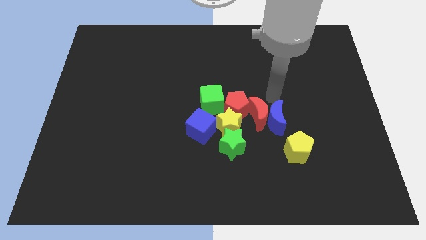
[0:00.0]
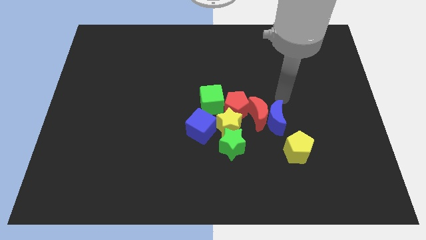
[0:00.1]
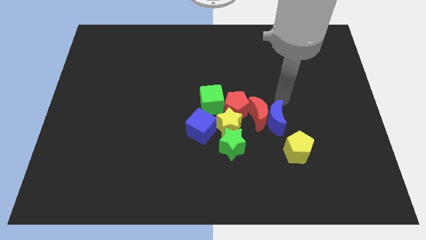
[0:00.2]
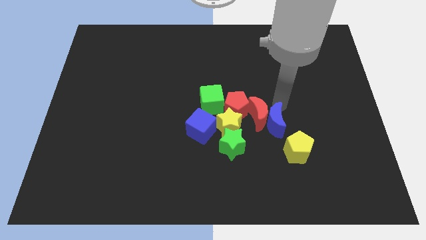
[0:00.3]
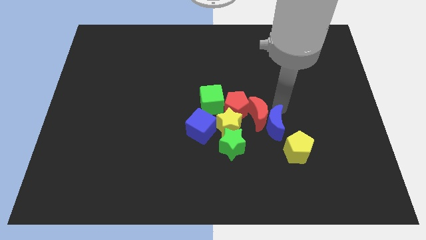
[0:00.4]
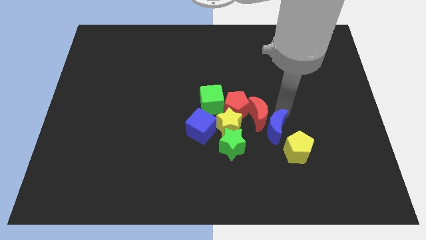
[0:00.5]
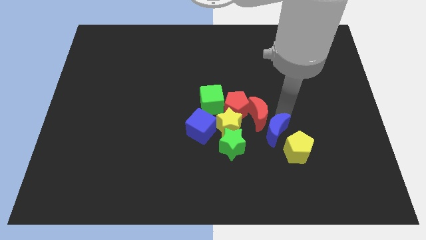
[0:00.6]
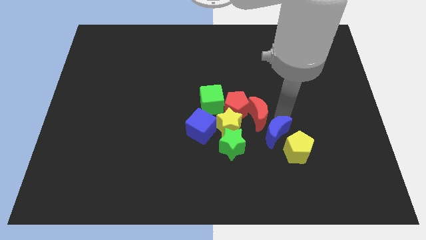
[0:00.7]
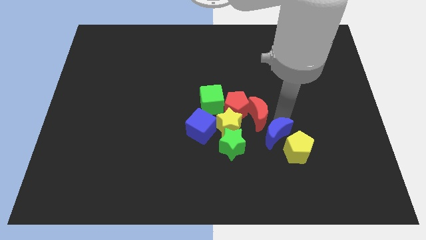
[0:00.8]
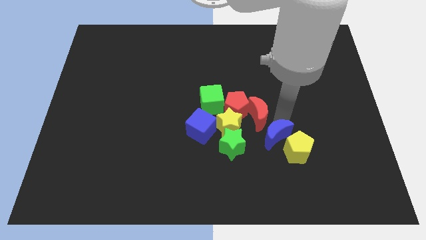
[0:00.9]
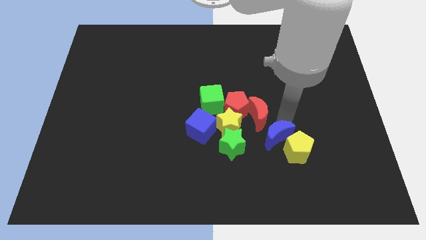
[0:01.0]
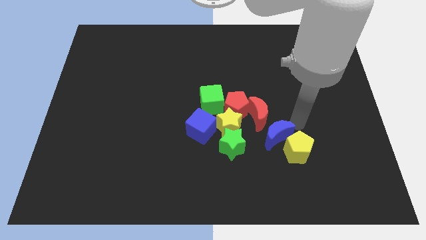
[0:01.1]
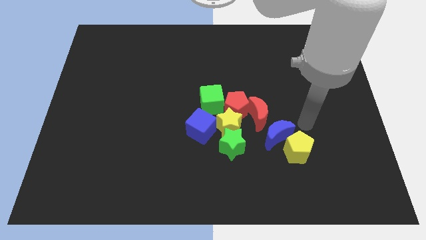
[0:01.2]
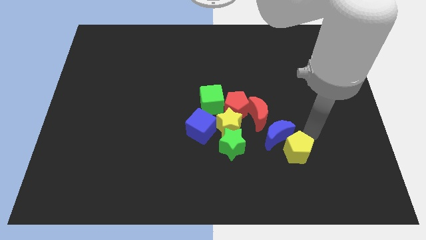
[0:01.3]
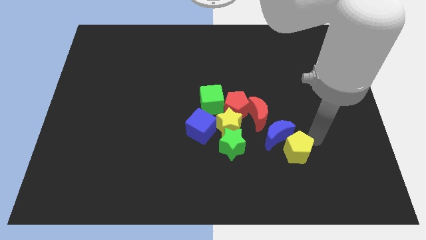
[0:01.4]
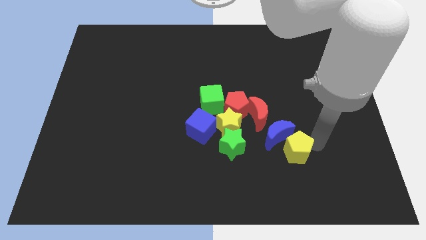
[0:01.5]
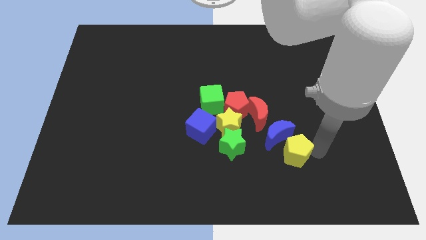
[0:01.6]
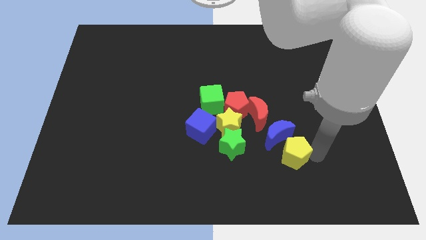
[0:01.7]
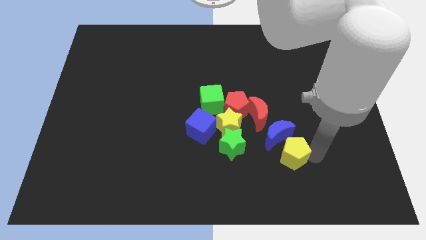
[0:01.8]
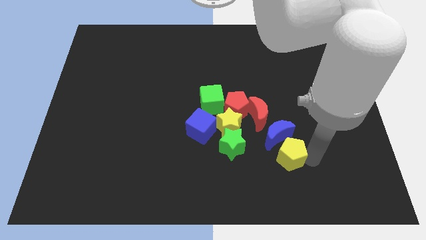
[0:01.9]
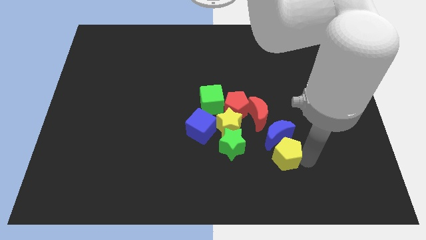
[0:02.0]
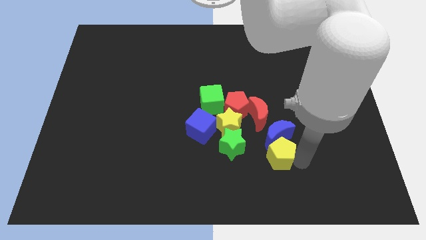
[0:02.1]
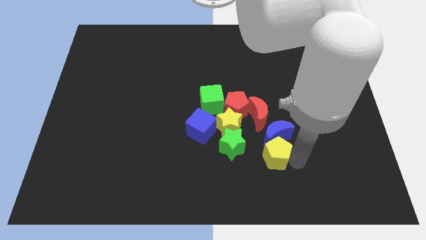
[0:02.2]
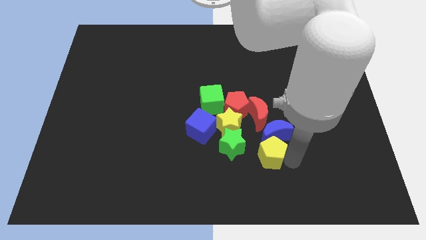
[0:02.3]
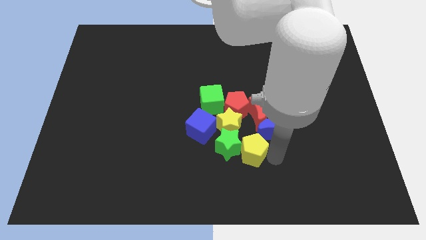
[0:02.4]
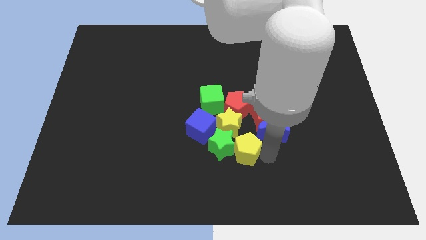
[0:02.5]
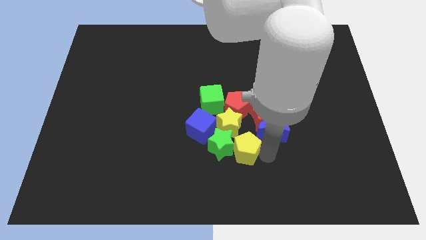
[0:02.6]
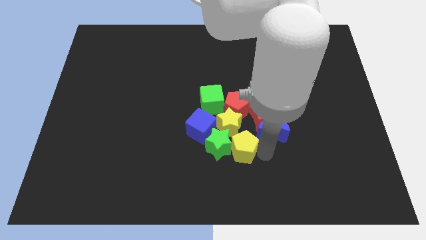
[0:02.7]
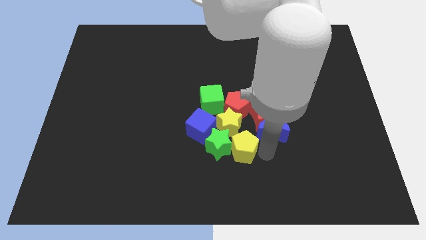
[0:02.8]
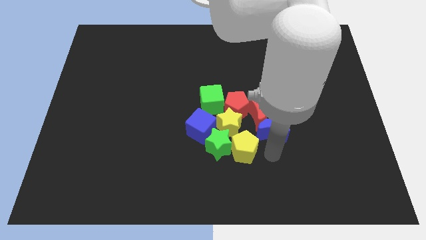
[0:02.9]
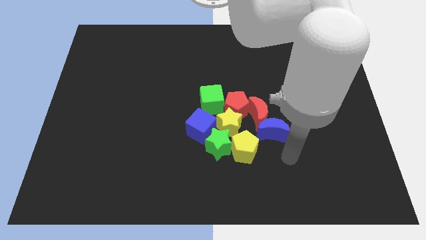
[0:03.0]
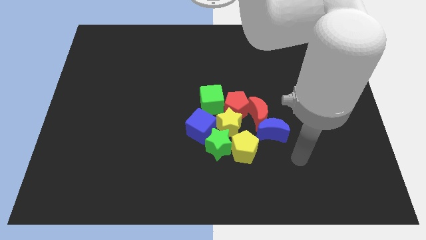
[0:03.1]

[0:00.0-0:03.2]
move blue moon diagonally top right to the yellow pentagon

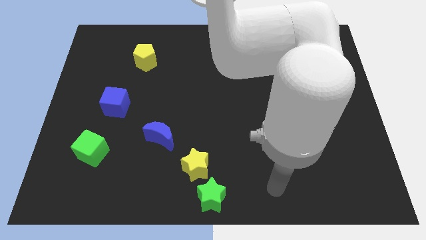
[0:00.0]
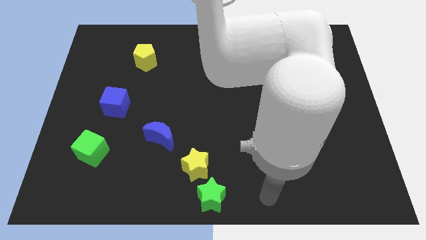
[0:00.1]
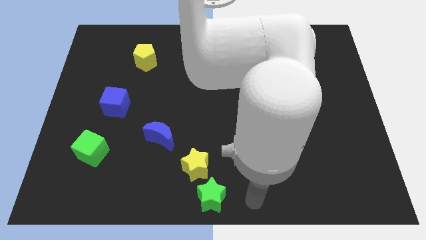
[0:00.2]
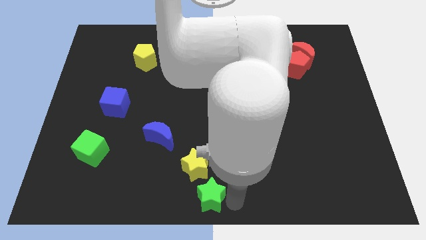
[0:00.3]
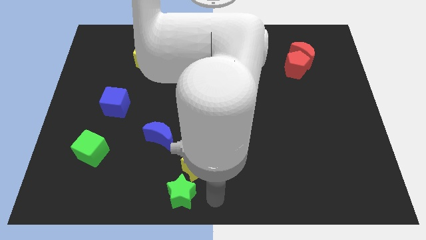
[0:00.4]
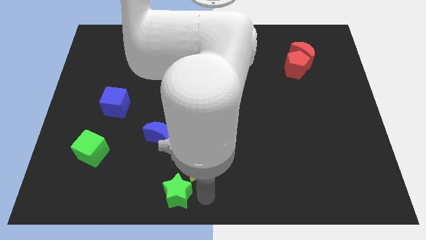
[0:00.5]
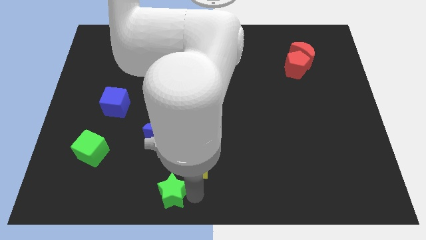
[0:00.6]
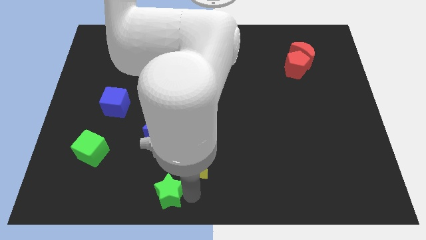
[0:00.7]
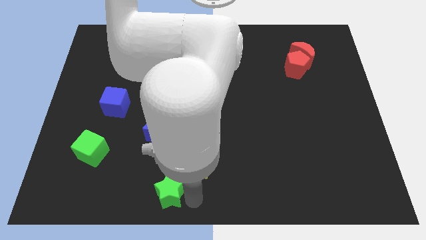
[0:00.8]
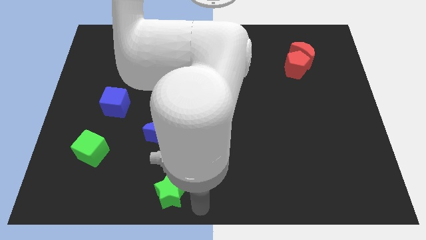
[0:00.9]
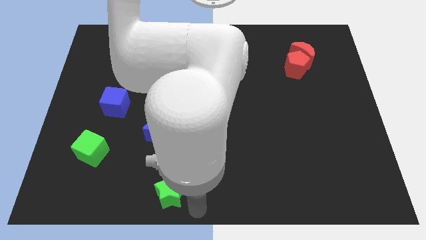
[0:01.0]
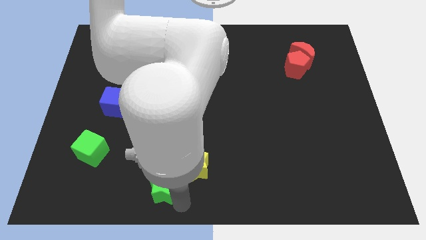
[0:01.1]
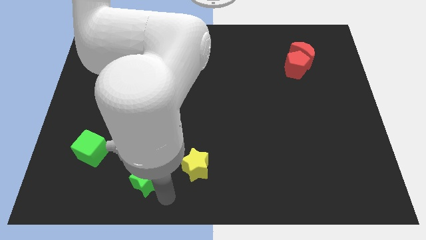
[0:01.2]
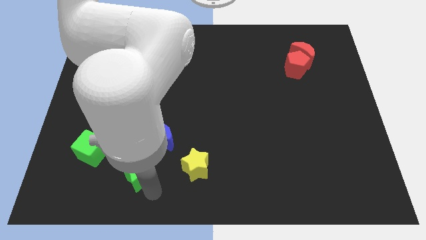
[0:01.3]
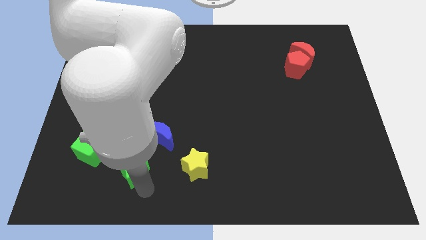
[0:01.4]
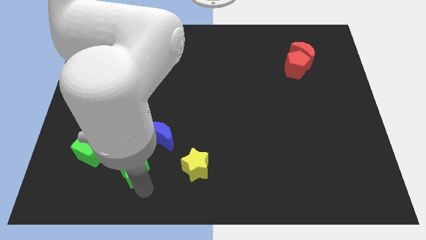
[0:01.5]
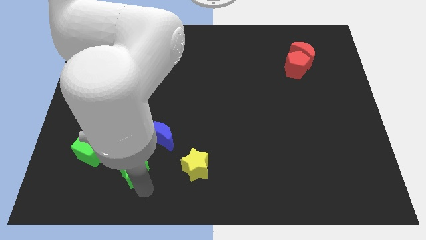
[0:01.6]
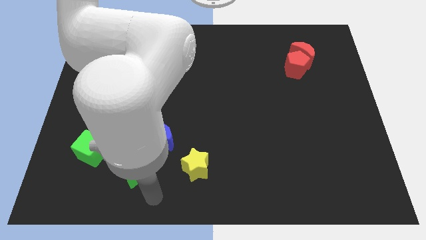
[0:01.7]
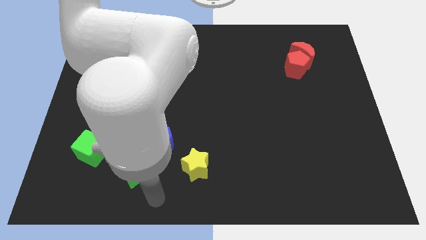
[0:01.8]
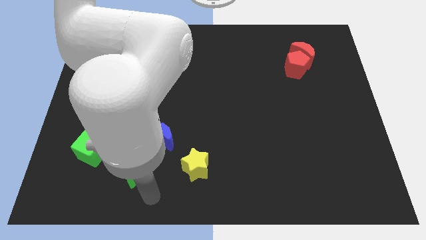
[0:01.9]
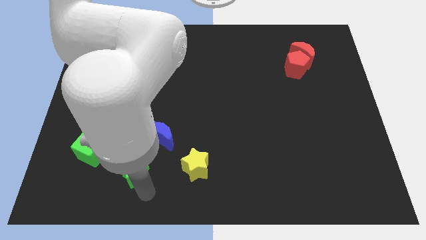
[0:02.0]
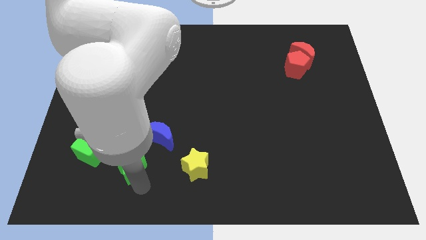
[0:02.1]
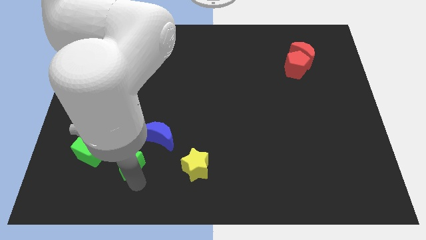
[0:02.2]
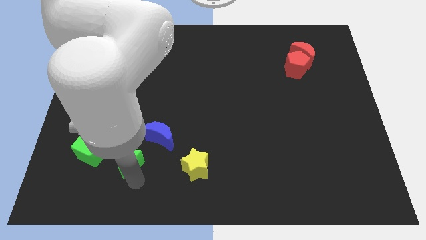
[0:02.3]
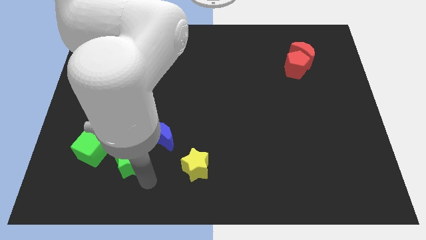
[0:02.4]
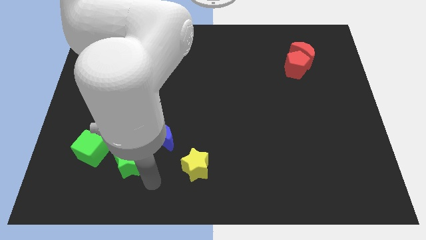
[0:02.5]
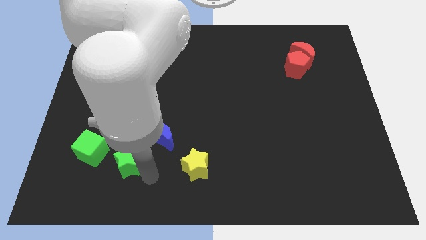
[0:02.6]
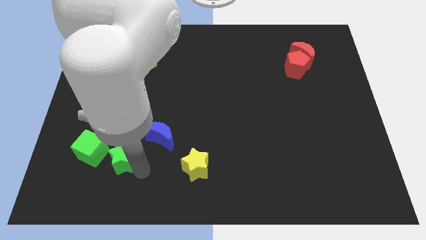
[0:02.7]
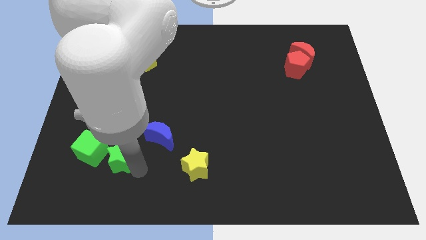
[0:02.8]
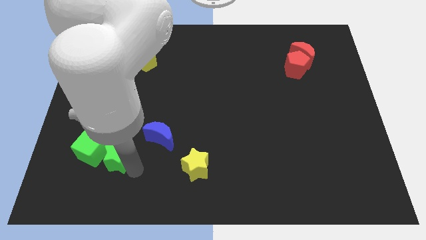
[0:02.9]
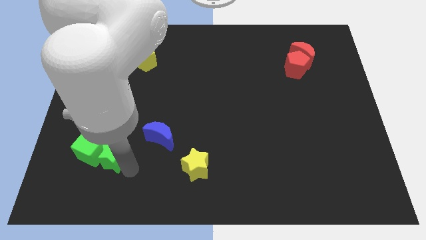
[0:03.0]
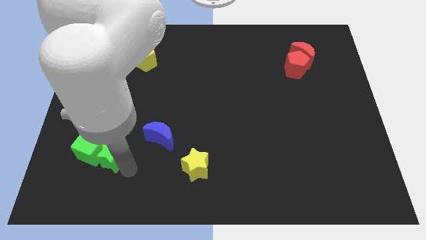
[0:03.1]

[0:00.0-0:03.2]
place green star into green cube

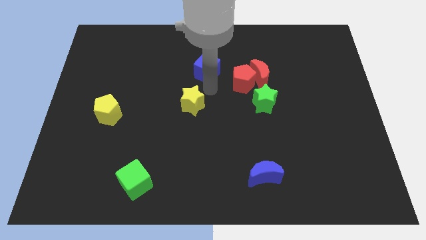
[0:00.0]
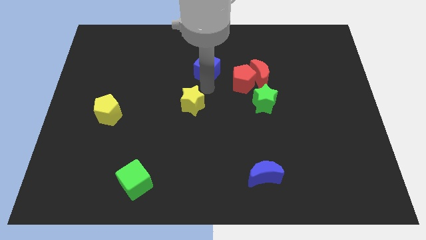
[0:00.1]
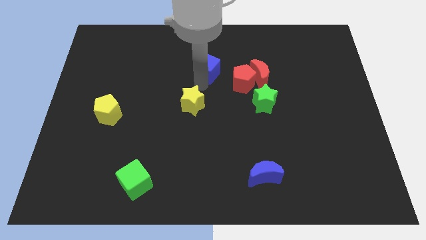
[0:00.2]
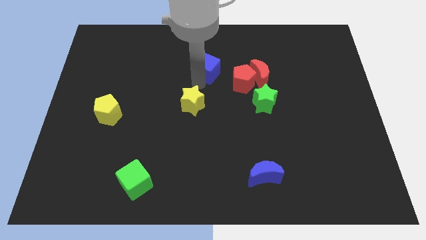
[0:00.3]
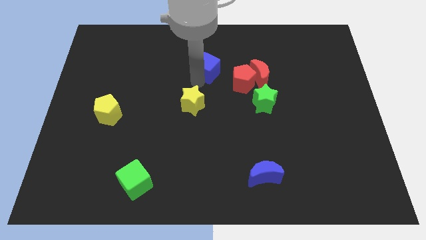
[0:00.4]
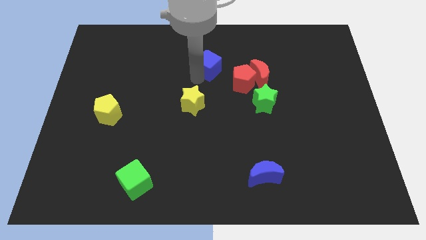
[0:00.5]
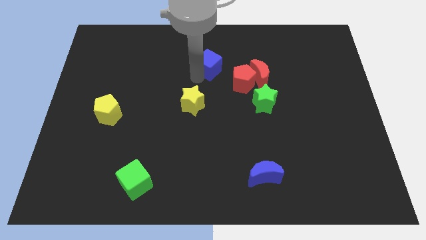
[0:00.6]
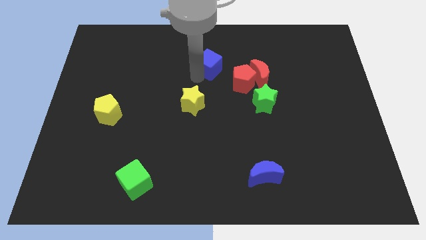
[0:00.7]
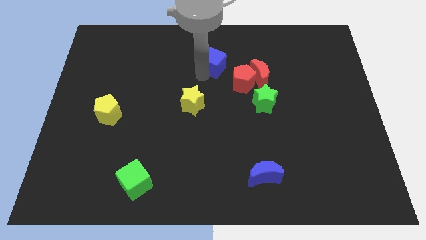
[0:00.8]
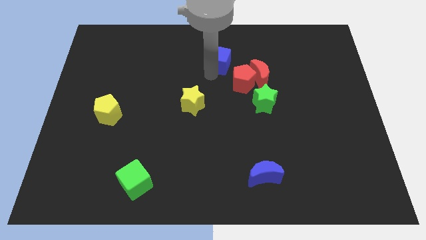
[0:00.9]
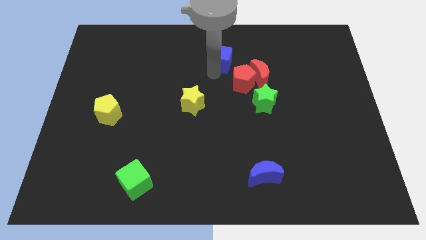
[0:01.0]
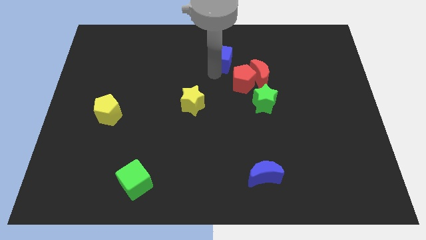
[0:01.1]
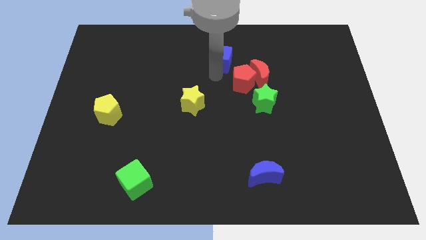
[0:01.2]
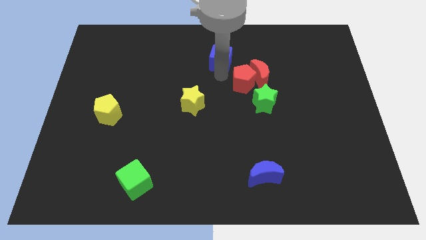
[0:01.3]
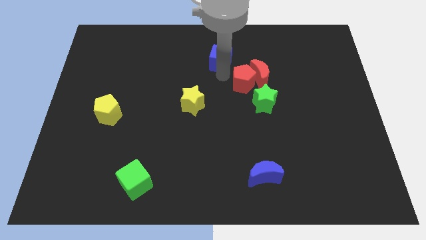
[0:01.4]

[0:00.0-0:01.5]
move the blue cube slightly towards the top center of the board

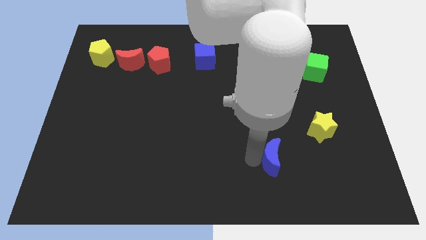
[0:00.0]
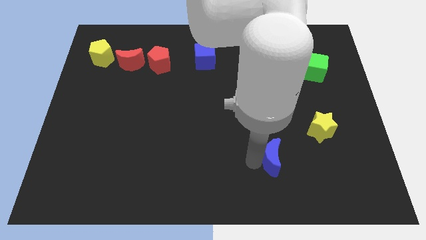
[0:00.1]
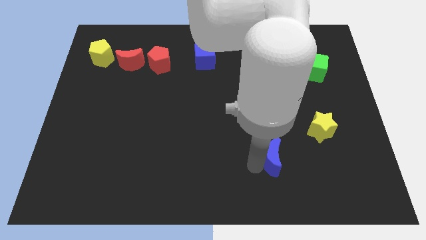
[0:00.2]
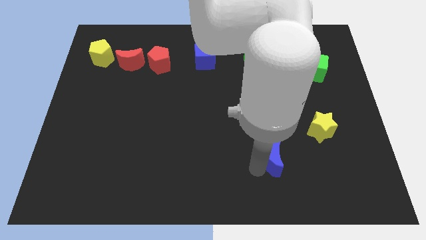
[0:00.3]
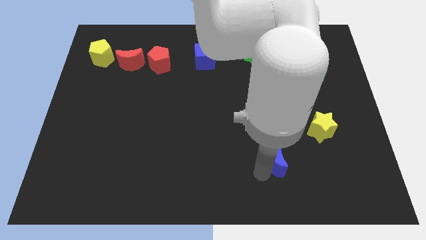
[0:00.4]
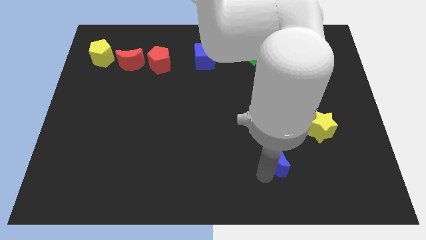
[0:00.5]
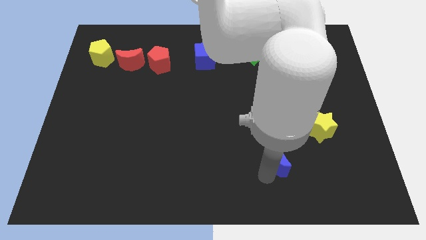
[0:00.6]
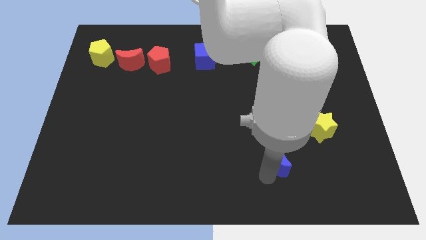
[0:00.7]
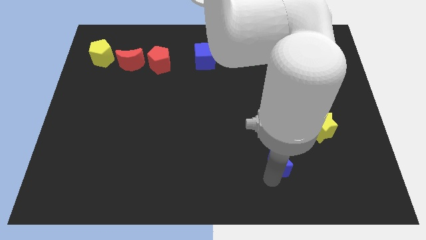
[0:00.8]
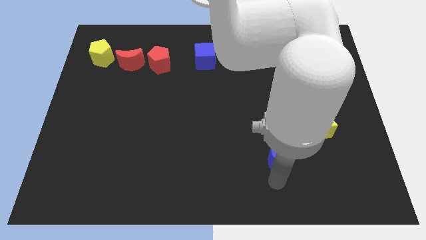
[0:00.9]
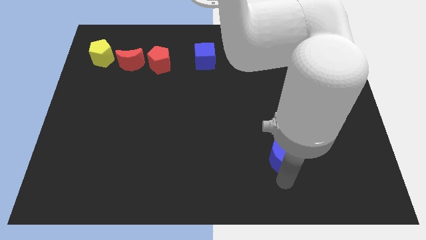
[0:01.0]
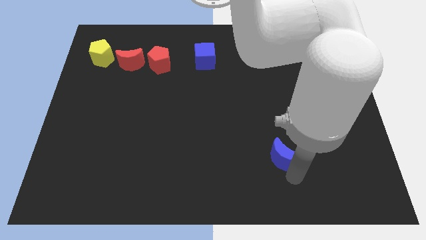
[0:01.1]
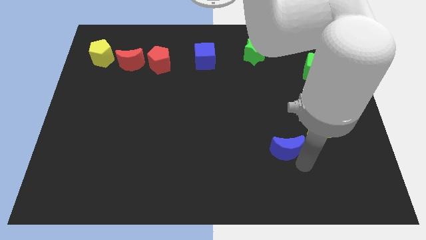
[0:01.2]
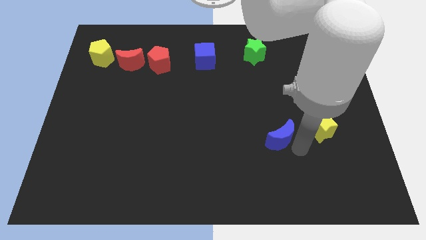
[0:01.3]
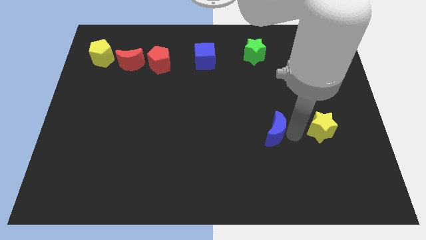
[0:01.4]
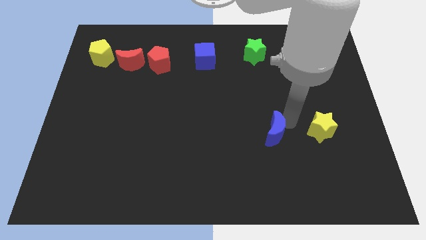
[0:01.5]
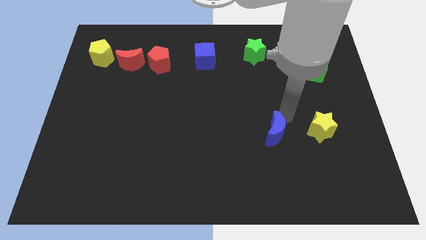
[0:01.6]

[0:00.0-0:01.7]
push the blue moon parallel to the left of the yellow star
